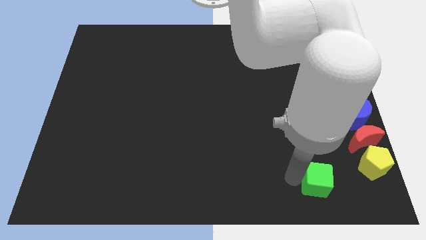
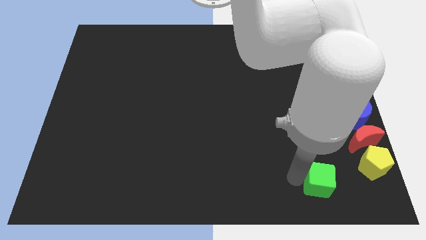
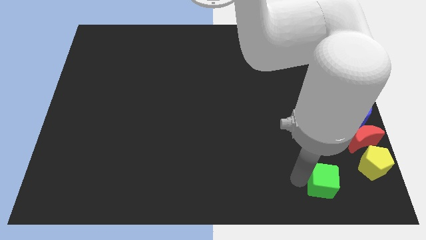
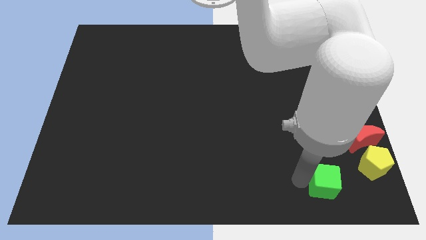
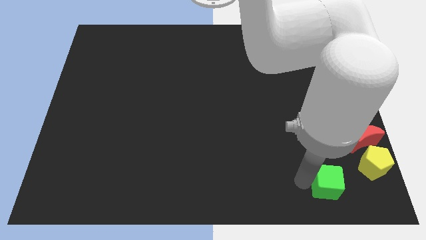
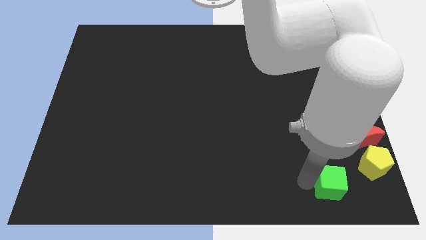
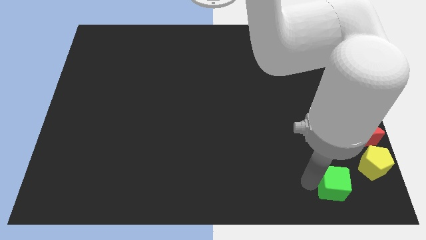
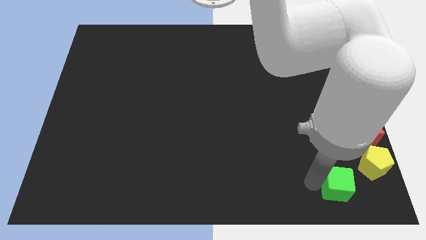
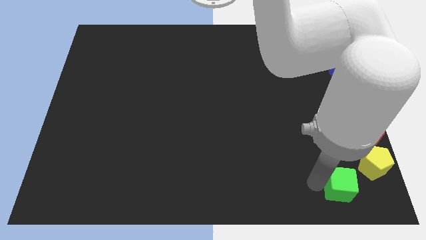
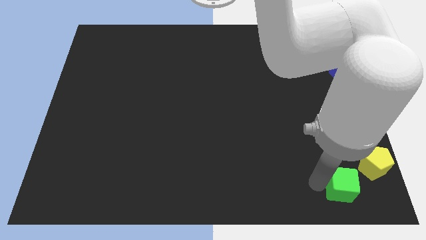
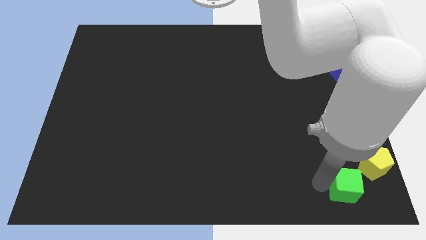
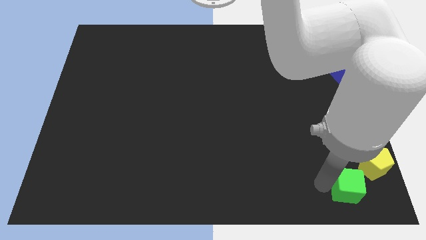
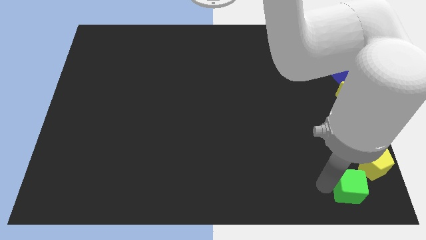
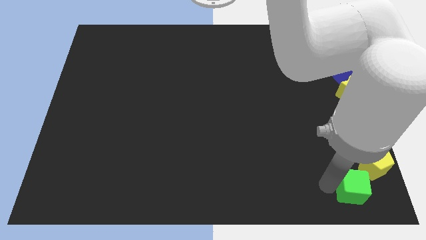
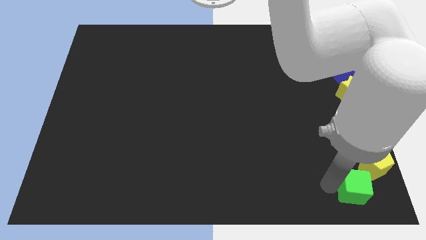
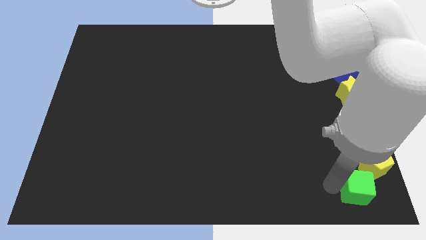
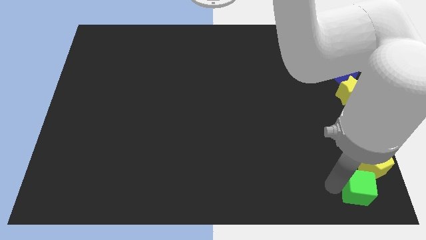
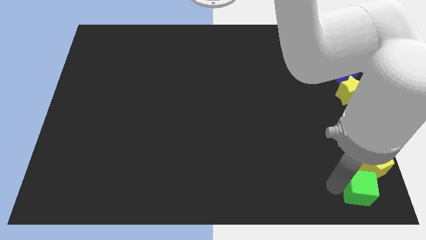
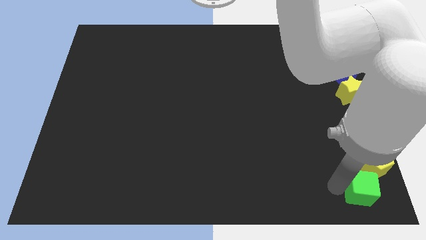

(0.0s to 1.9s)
push the green cube close to the yellow penatgon to the right bottom corner of the board

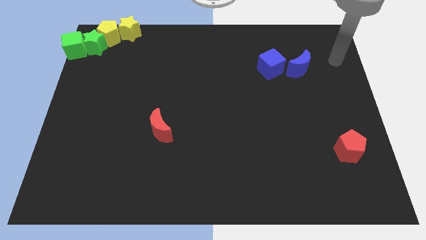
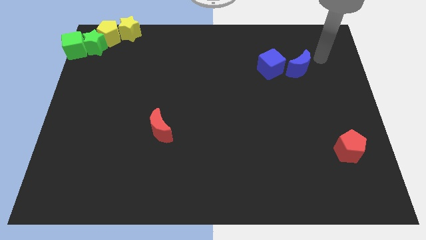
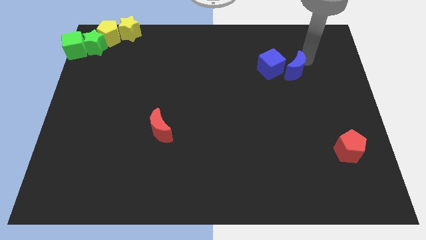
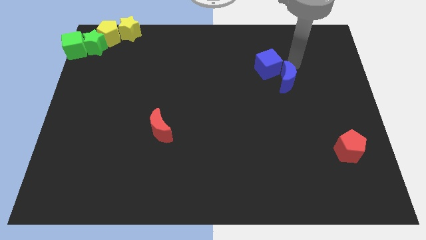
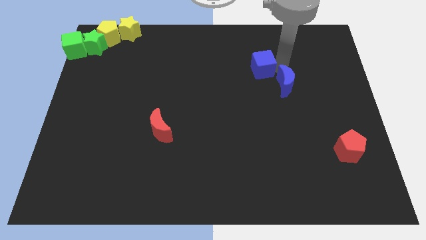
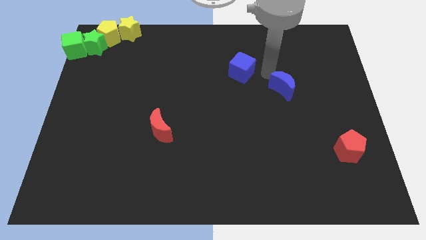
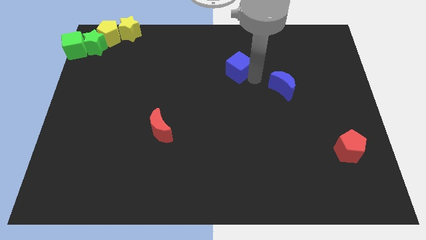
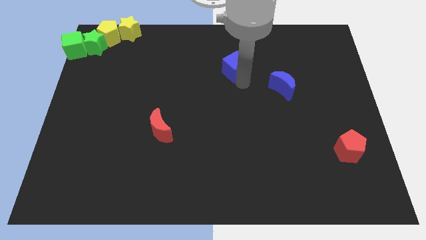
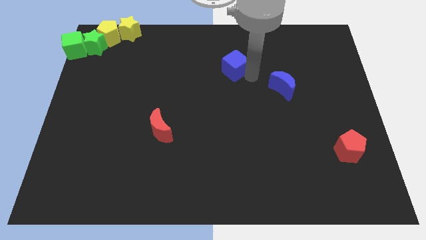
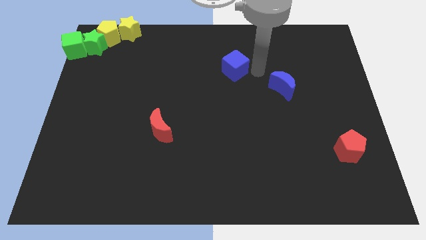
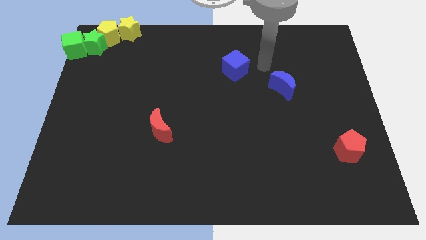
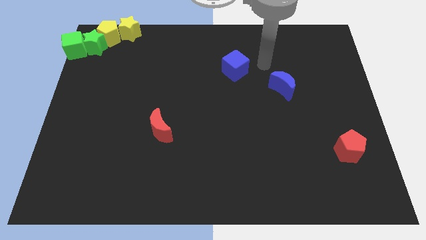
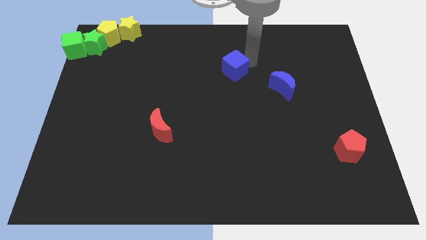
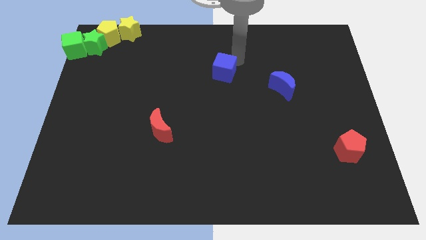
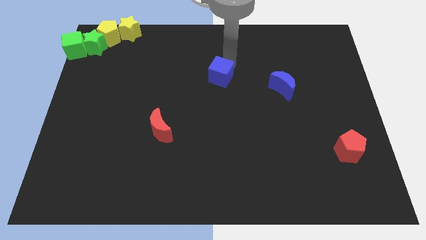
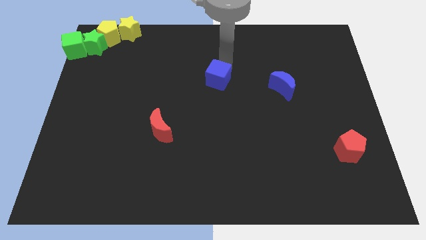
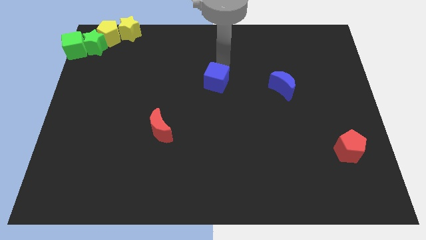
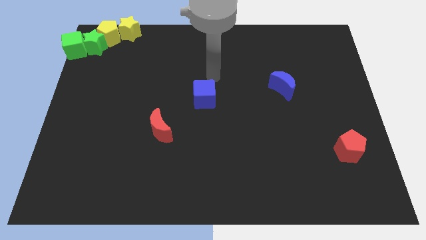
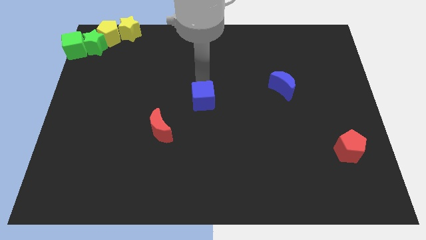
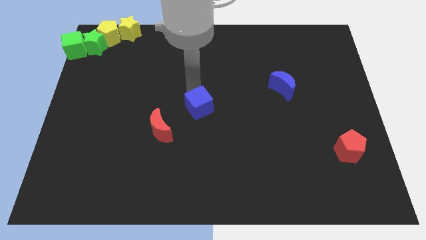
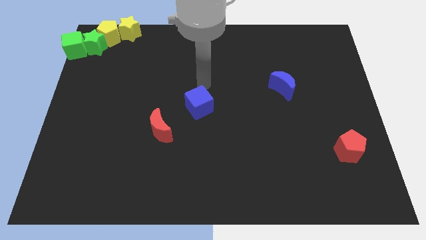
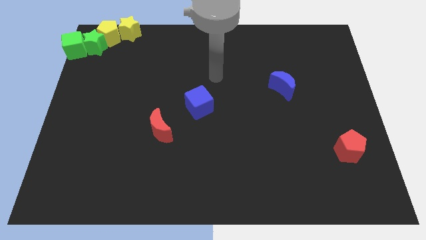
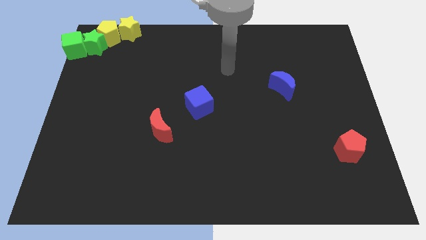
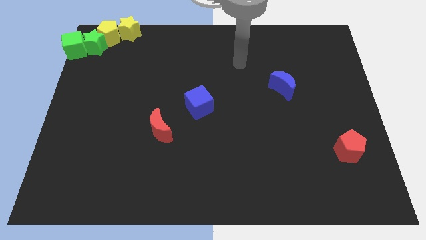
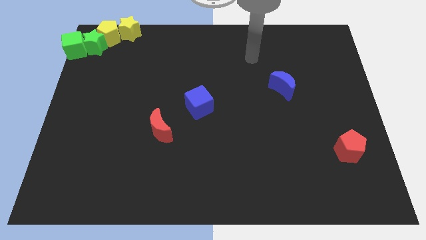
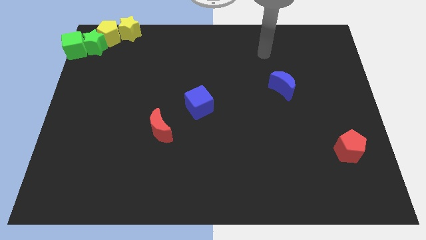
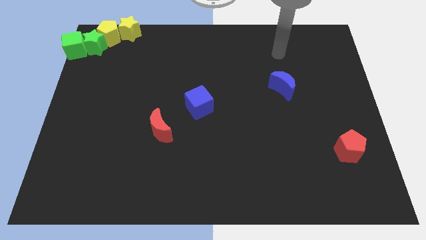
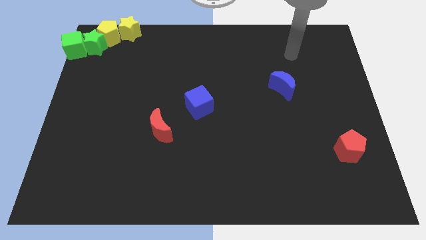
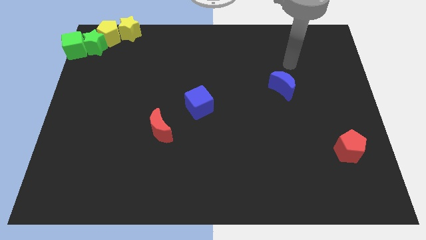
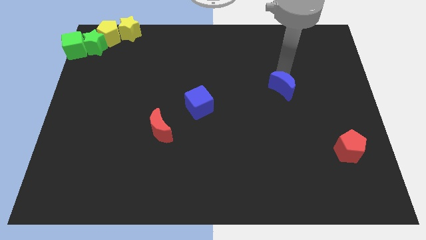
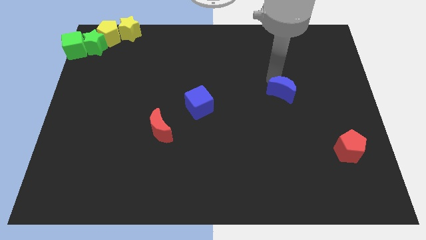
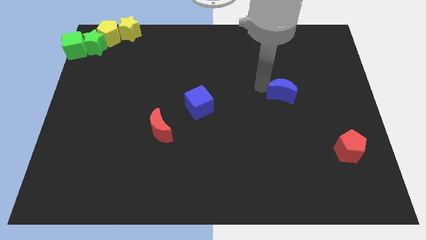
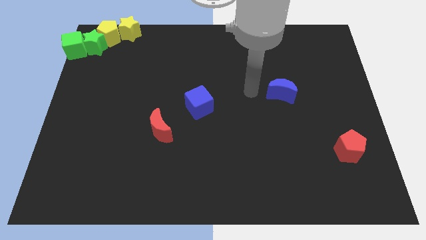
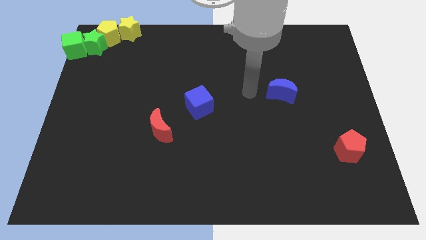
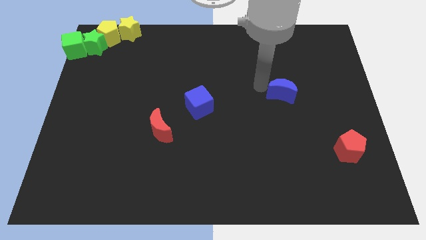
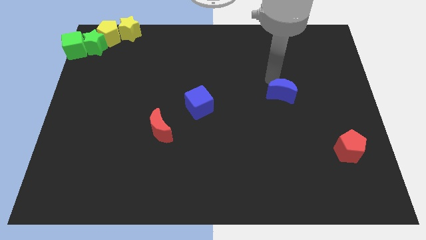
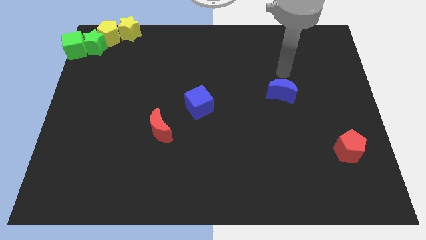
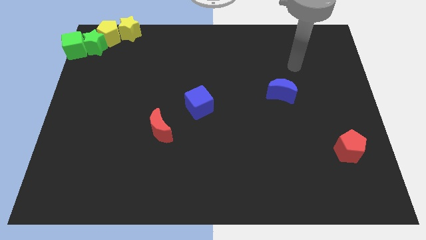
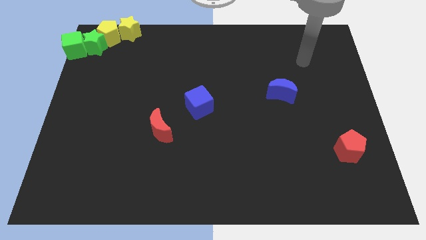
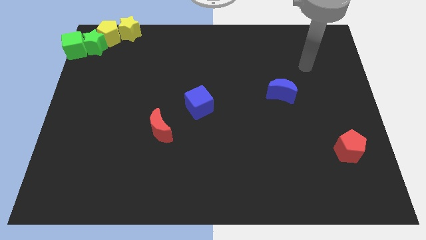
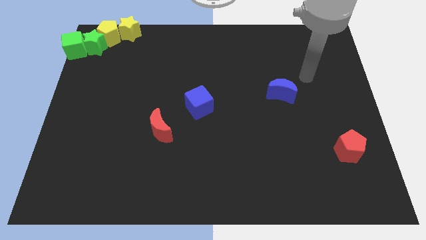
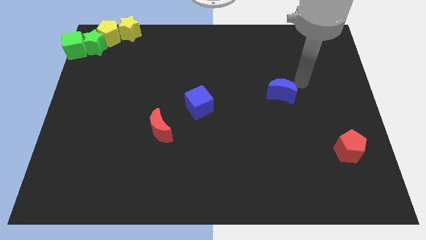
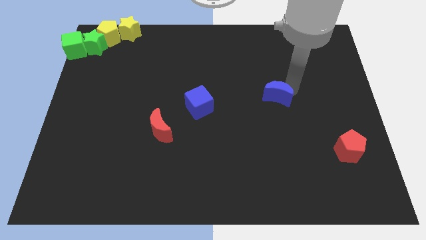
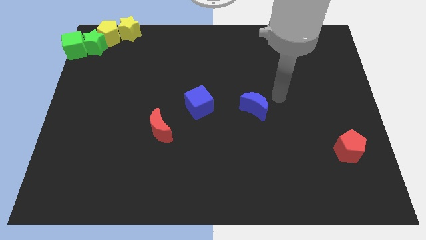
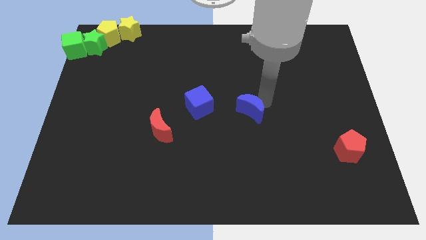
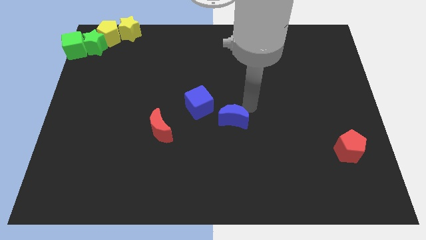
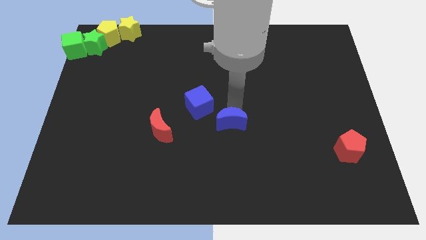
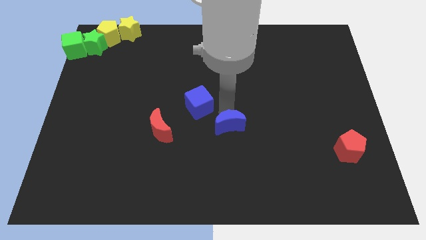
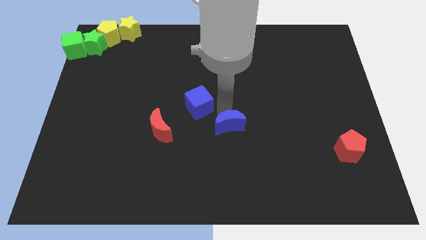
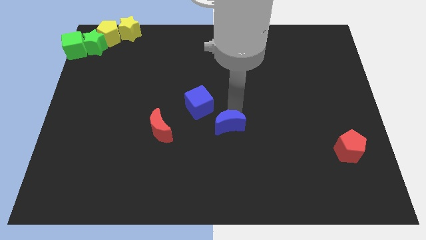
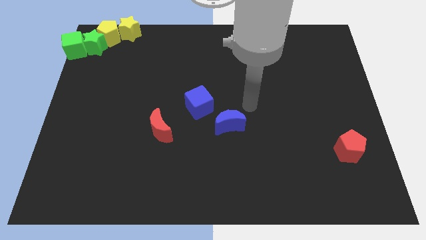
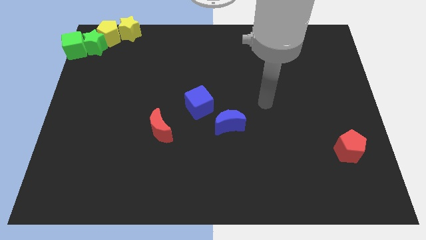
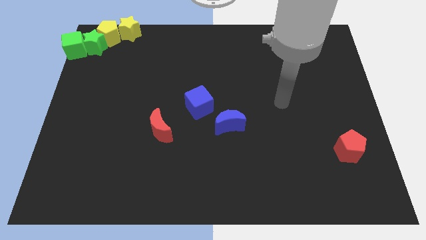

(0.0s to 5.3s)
place the blue blocks at the center of the board

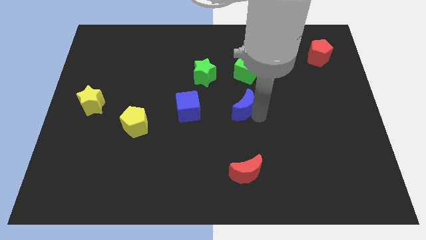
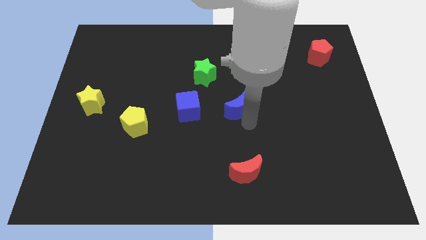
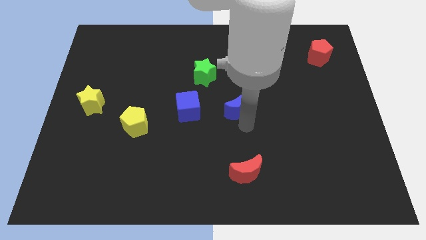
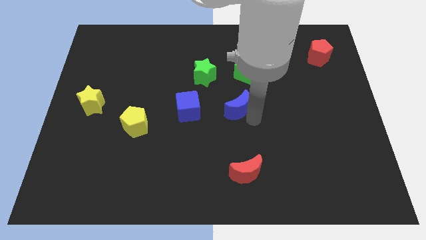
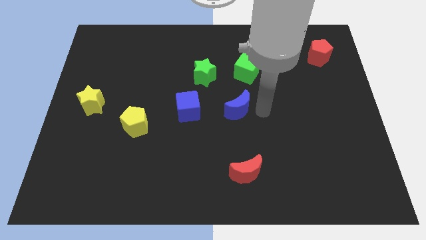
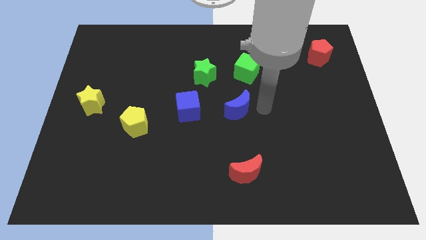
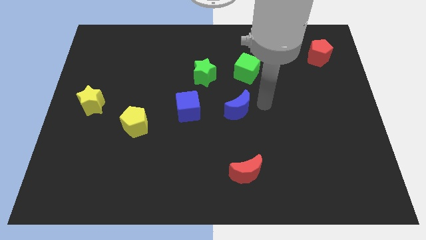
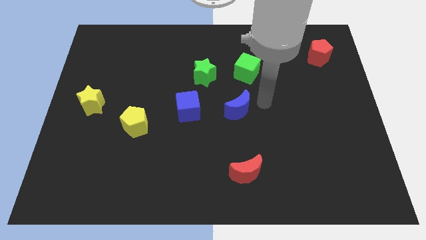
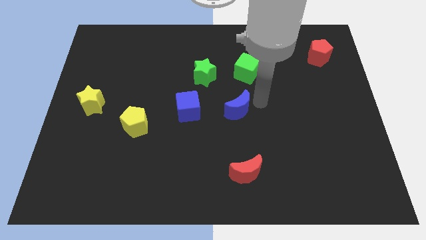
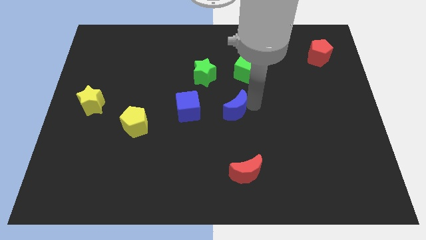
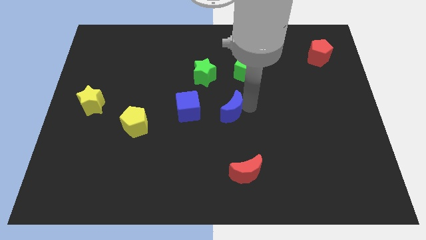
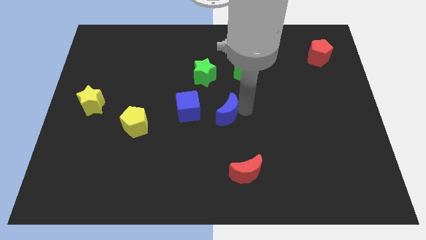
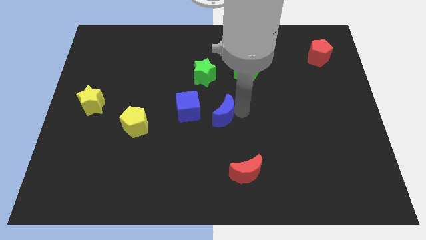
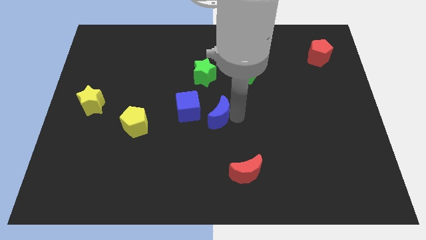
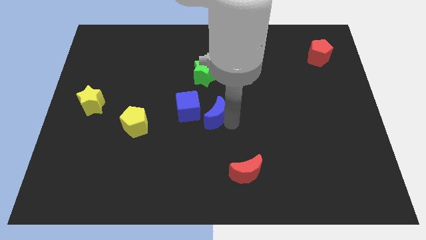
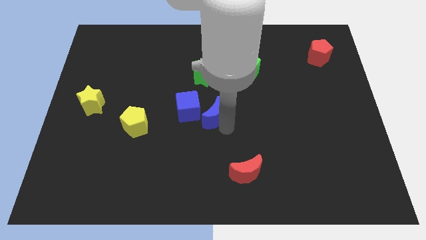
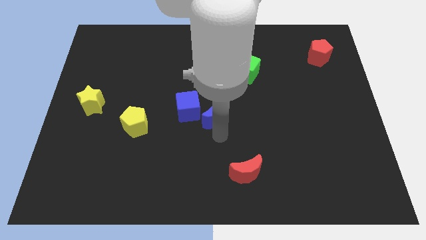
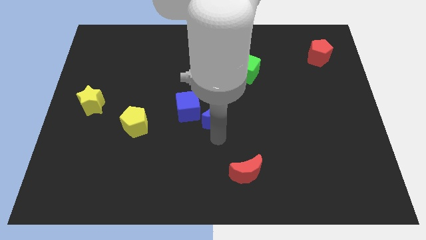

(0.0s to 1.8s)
move the blue moon diagonally to the blue cube in the right

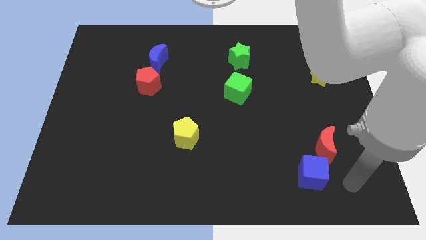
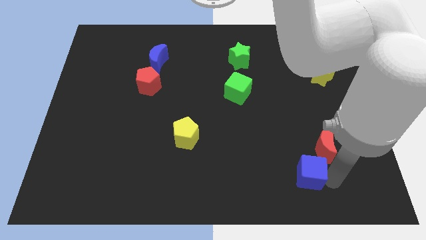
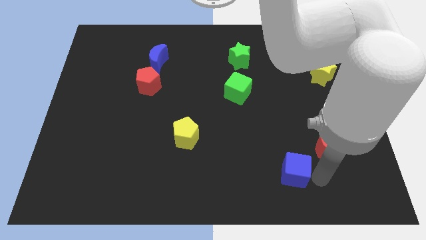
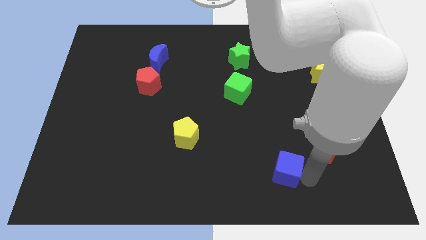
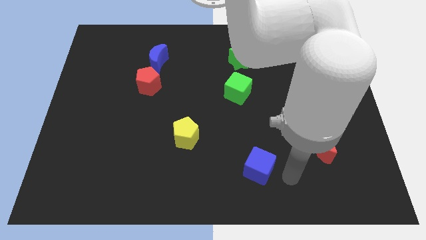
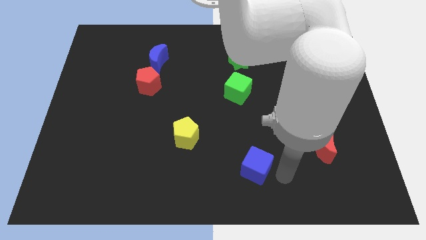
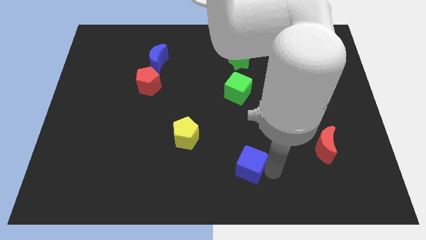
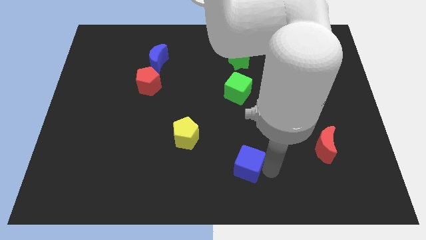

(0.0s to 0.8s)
separate the blue cube from the red moon
